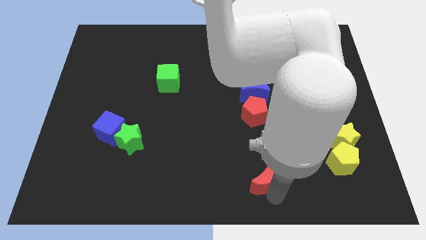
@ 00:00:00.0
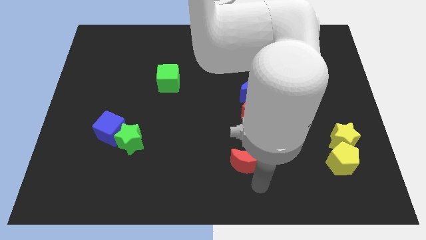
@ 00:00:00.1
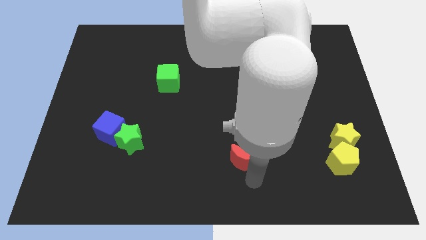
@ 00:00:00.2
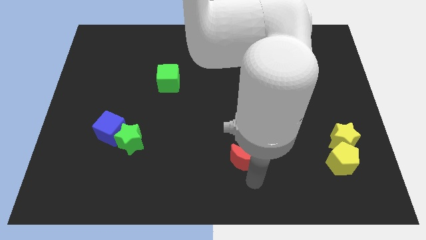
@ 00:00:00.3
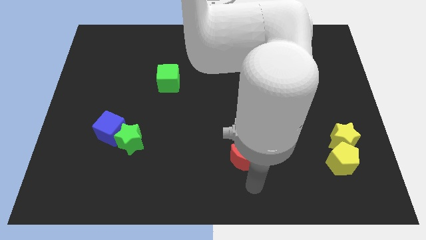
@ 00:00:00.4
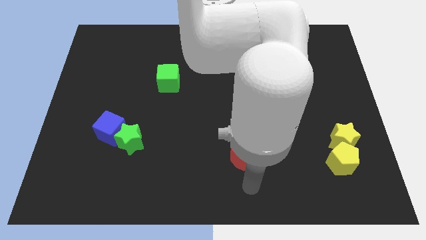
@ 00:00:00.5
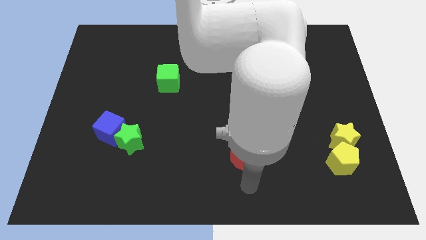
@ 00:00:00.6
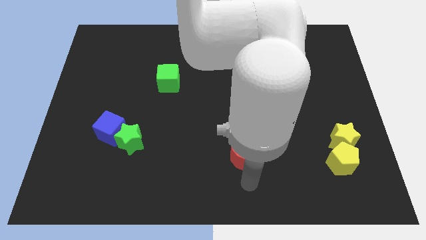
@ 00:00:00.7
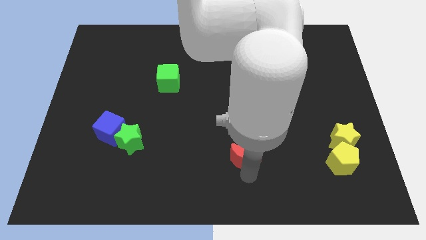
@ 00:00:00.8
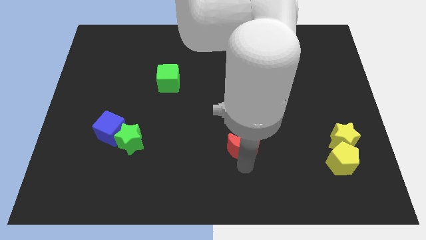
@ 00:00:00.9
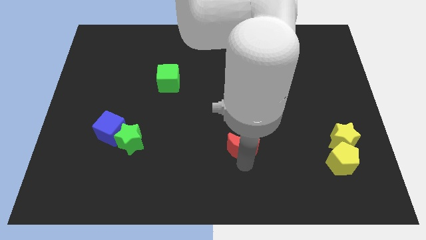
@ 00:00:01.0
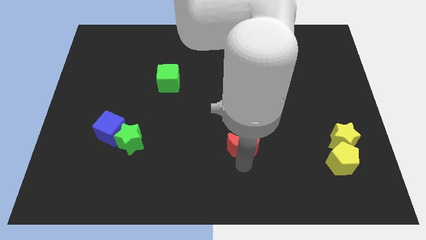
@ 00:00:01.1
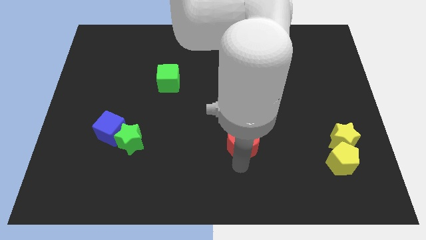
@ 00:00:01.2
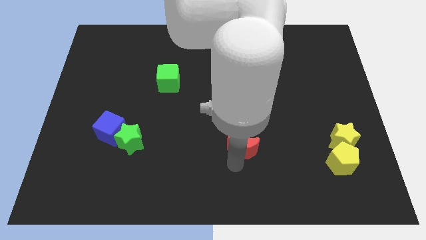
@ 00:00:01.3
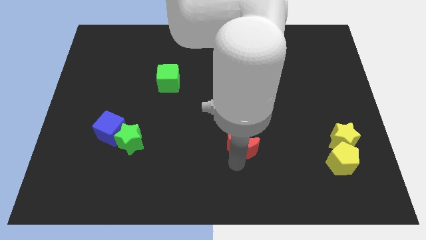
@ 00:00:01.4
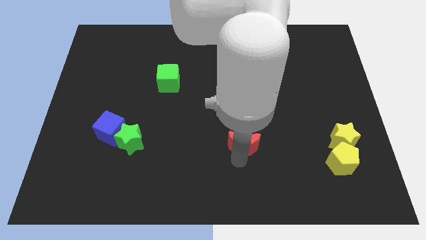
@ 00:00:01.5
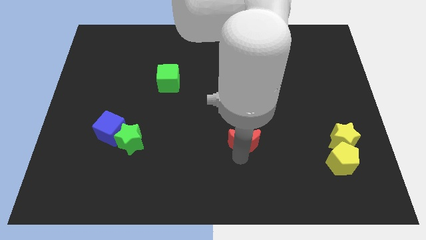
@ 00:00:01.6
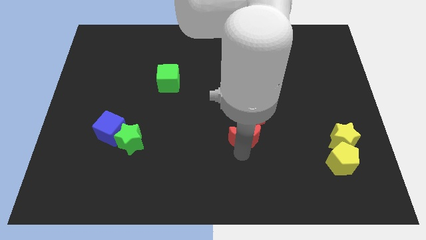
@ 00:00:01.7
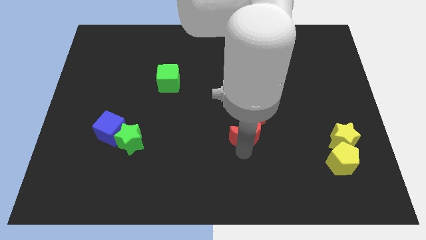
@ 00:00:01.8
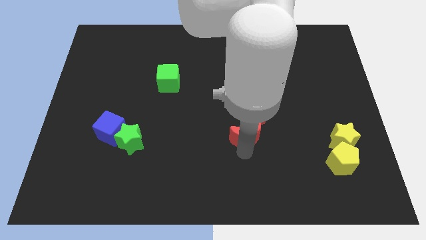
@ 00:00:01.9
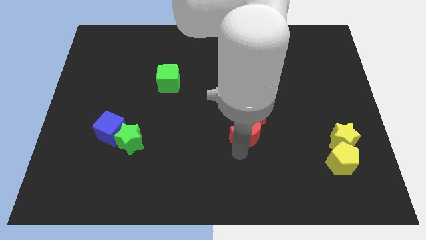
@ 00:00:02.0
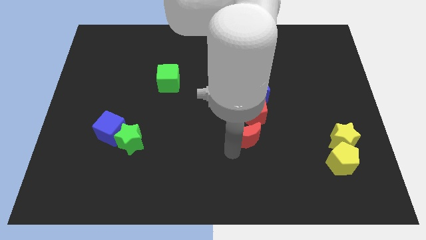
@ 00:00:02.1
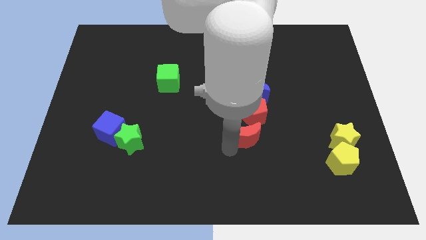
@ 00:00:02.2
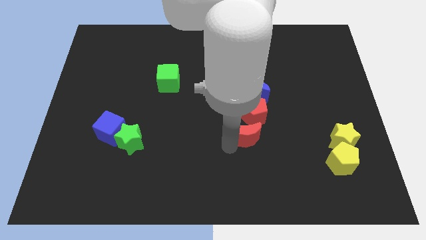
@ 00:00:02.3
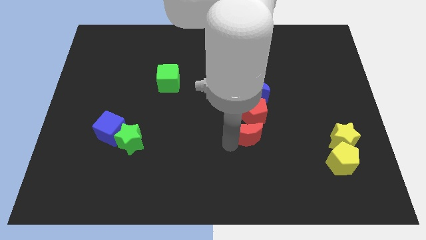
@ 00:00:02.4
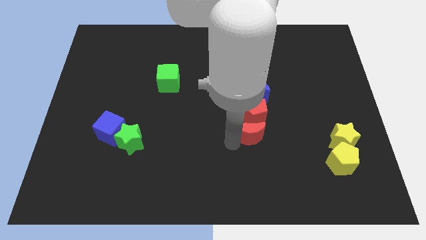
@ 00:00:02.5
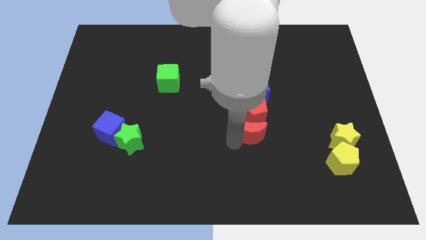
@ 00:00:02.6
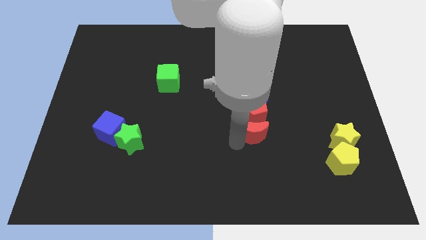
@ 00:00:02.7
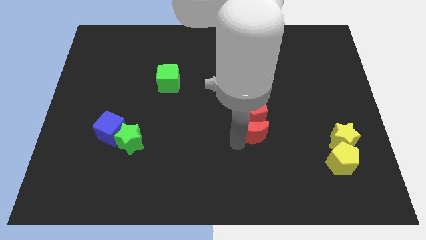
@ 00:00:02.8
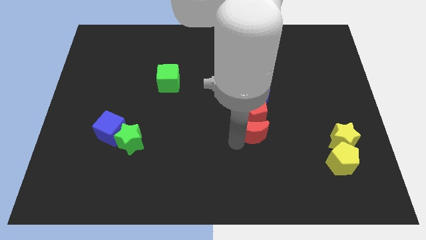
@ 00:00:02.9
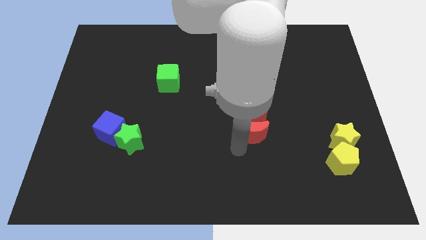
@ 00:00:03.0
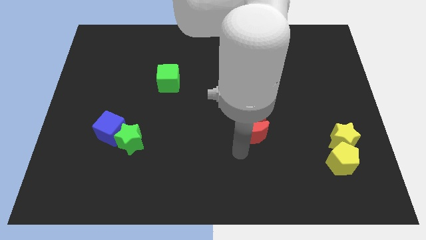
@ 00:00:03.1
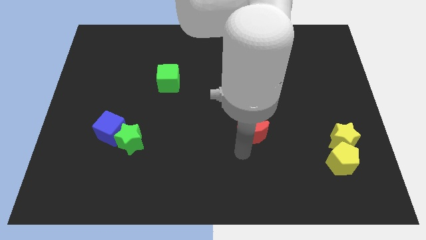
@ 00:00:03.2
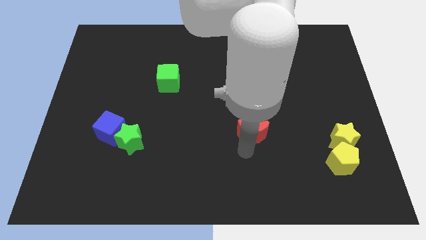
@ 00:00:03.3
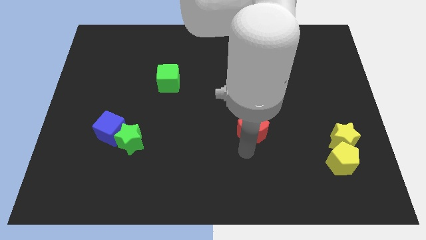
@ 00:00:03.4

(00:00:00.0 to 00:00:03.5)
move the red moon below the red pentagon

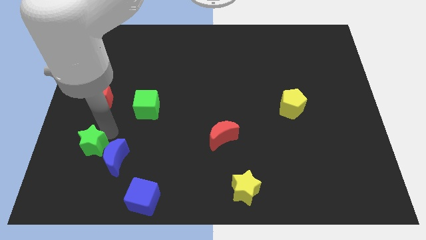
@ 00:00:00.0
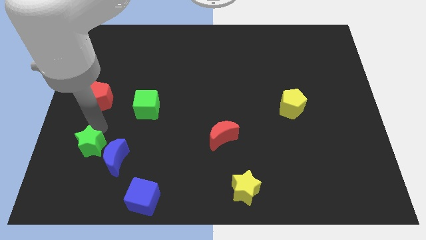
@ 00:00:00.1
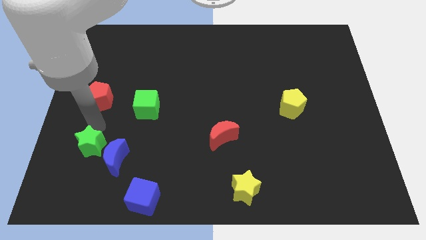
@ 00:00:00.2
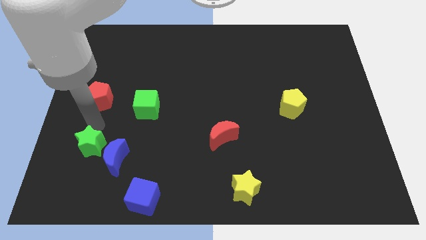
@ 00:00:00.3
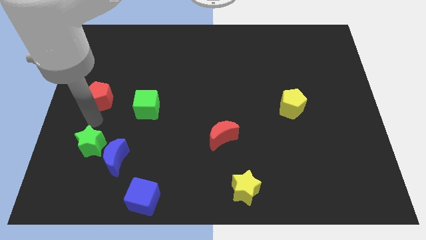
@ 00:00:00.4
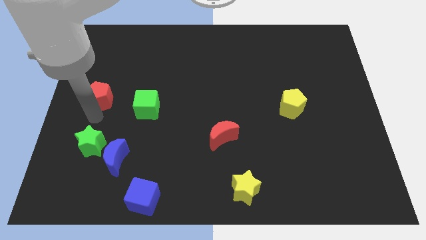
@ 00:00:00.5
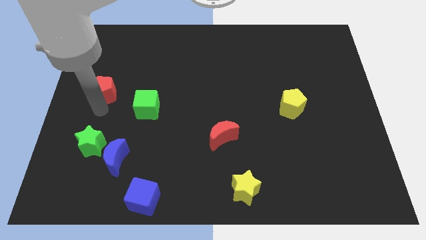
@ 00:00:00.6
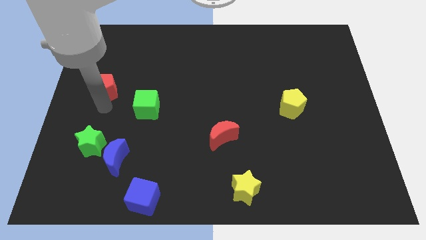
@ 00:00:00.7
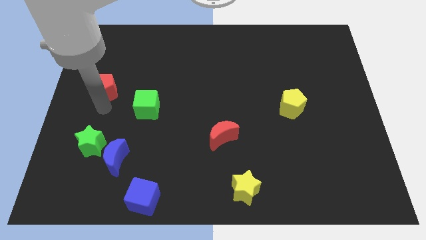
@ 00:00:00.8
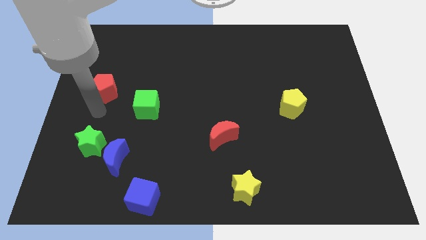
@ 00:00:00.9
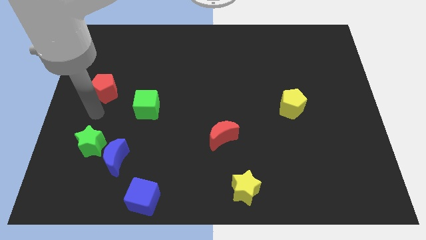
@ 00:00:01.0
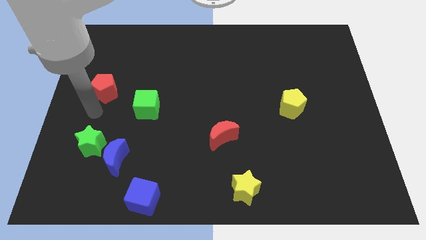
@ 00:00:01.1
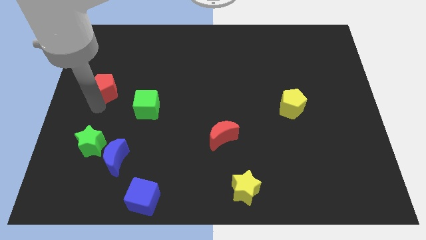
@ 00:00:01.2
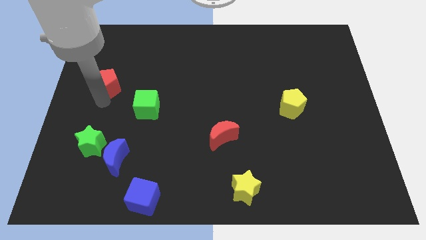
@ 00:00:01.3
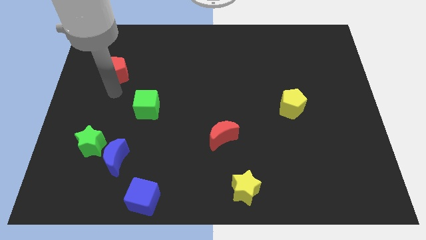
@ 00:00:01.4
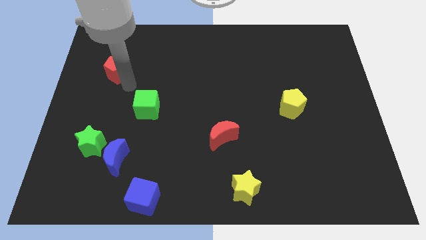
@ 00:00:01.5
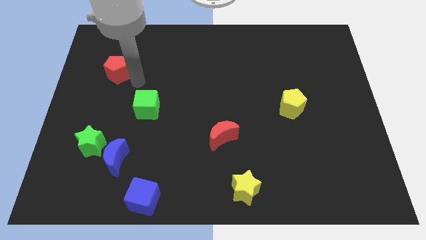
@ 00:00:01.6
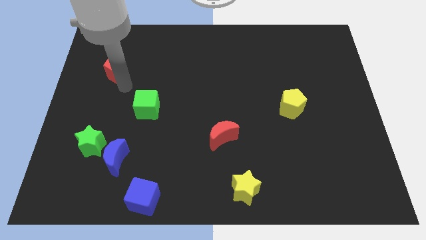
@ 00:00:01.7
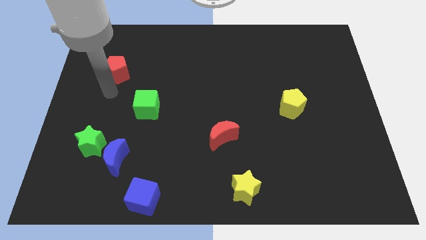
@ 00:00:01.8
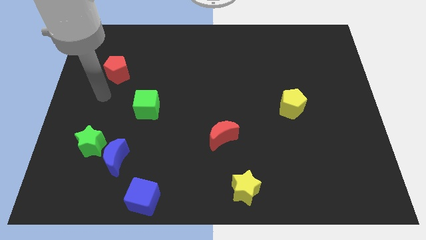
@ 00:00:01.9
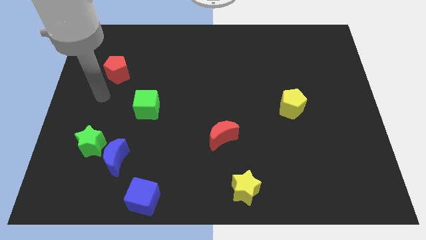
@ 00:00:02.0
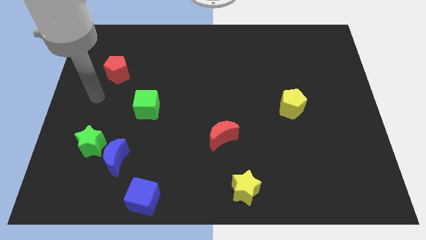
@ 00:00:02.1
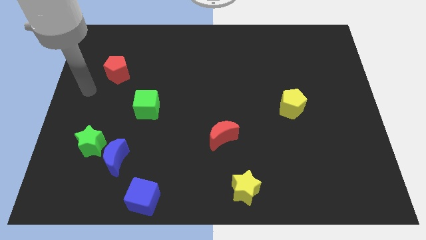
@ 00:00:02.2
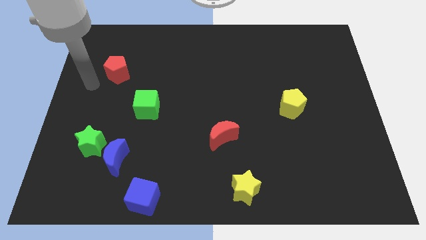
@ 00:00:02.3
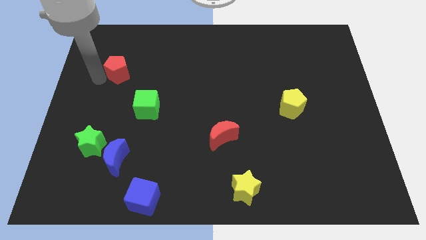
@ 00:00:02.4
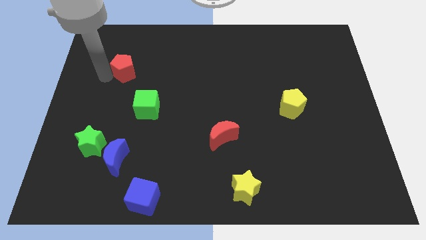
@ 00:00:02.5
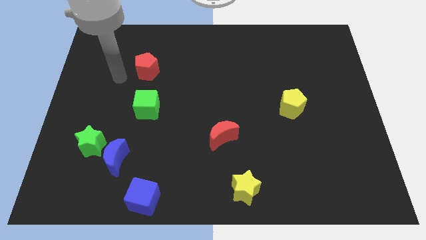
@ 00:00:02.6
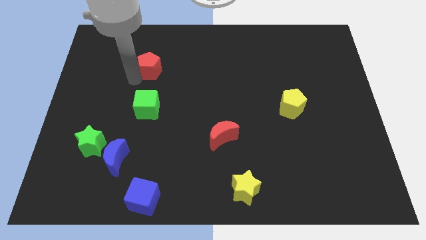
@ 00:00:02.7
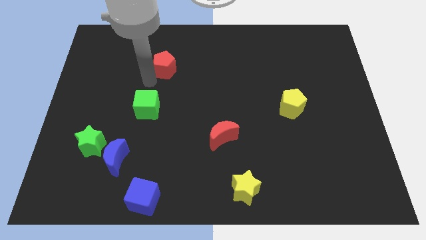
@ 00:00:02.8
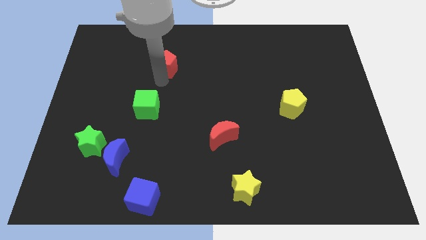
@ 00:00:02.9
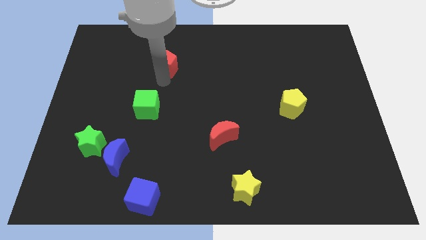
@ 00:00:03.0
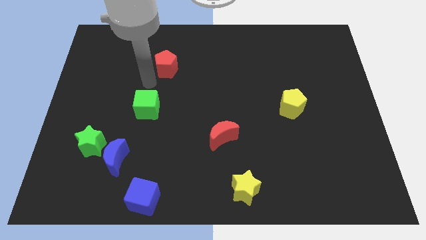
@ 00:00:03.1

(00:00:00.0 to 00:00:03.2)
slide the red pentagon to the top of the green block

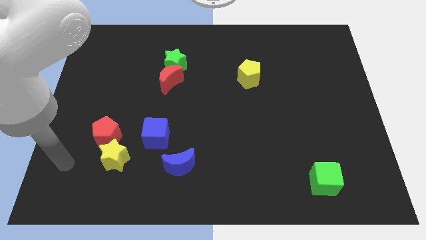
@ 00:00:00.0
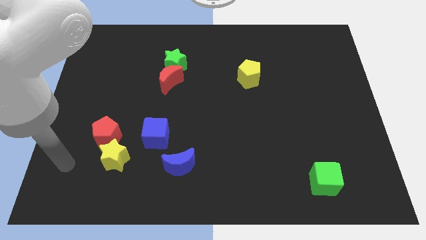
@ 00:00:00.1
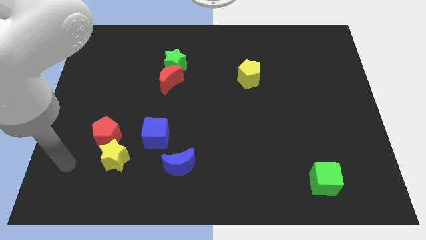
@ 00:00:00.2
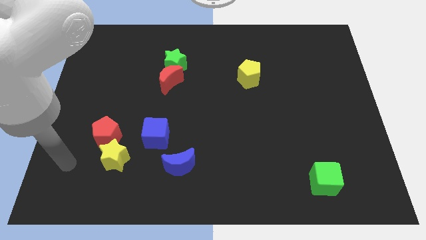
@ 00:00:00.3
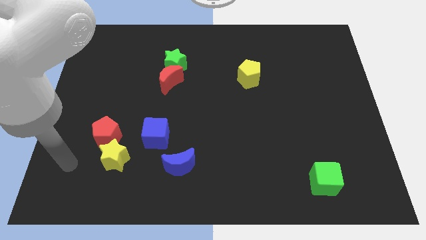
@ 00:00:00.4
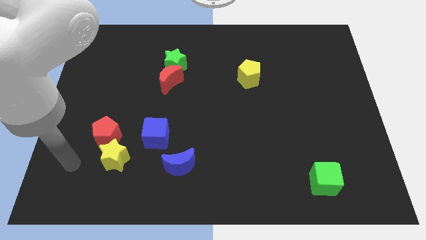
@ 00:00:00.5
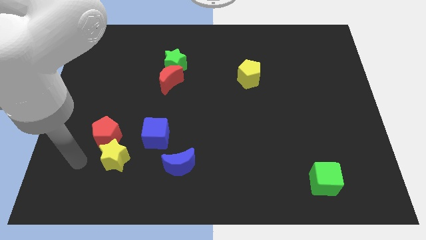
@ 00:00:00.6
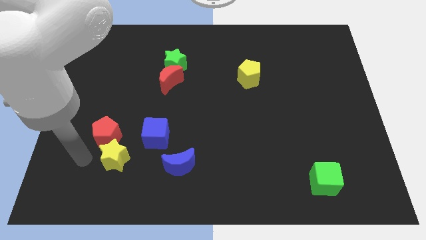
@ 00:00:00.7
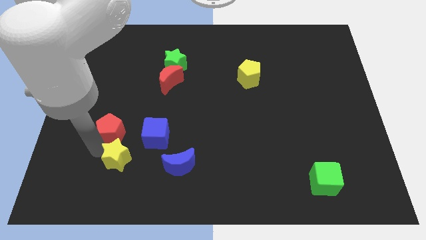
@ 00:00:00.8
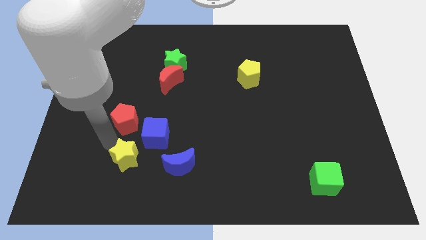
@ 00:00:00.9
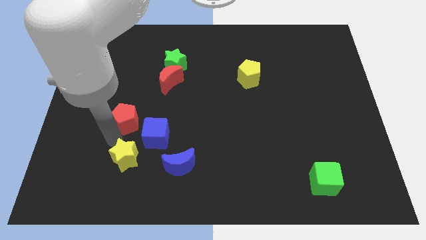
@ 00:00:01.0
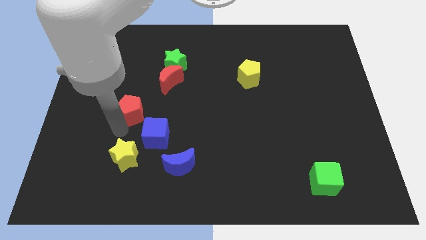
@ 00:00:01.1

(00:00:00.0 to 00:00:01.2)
separate the red pentagon from the yellow star

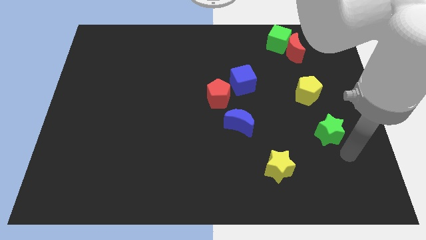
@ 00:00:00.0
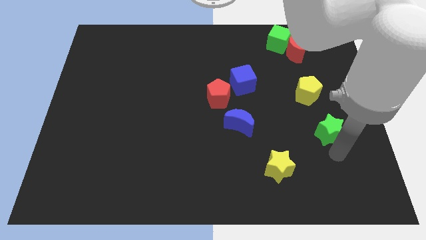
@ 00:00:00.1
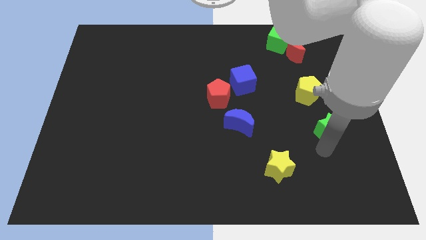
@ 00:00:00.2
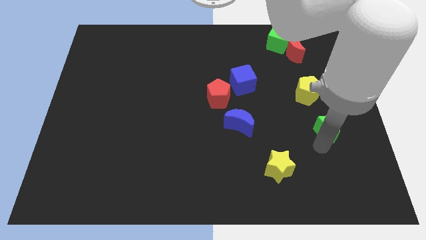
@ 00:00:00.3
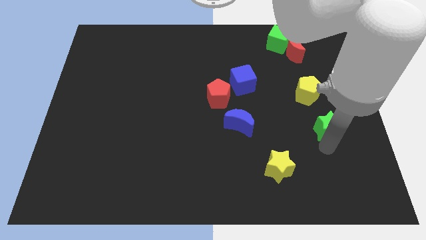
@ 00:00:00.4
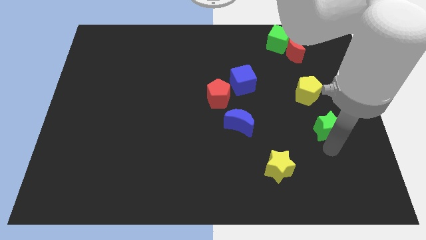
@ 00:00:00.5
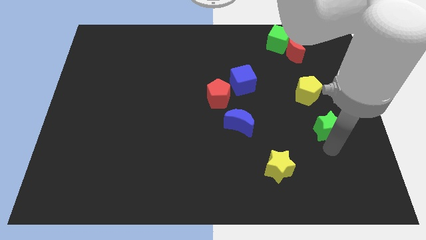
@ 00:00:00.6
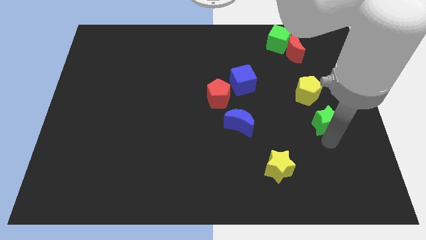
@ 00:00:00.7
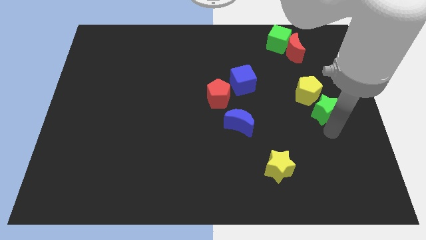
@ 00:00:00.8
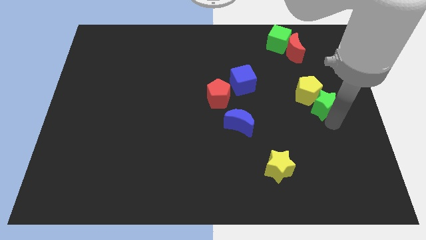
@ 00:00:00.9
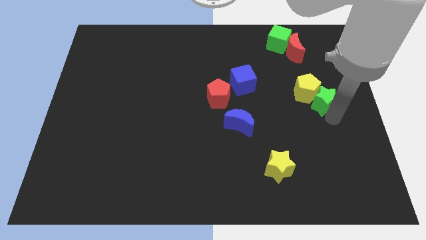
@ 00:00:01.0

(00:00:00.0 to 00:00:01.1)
push green star into yellow pentagon
